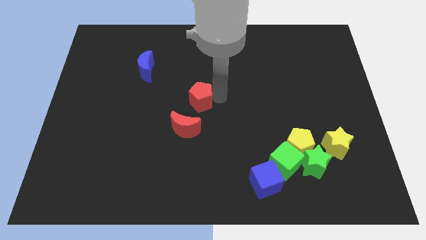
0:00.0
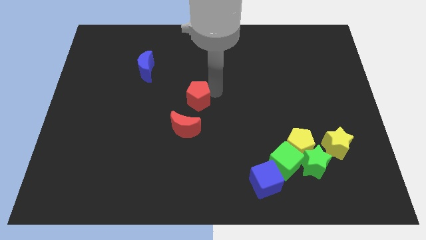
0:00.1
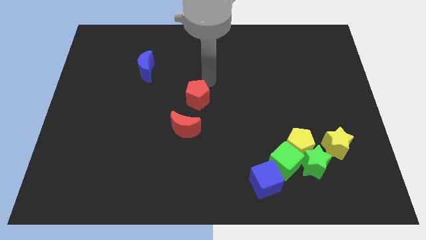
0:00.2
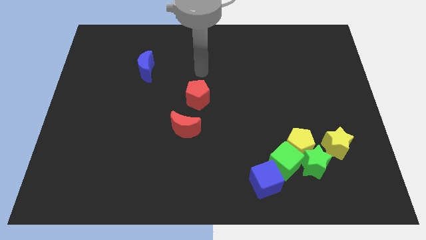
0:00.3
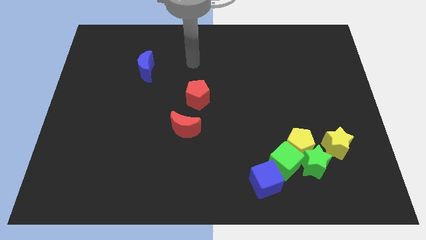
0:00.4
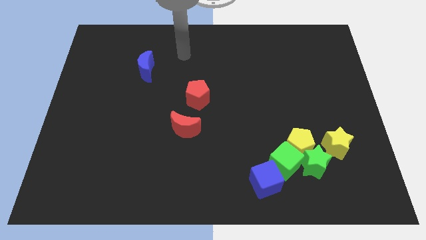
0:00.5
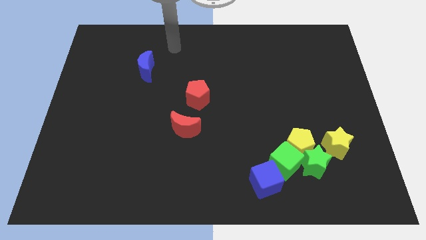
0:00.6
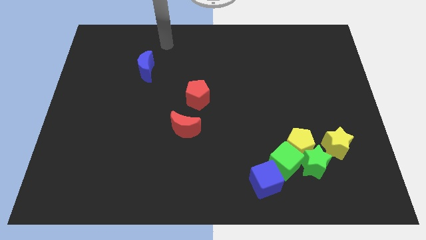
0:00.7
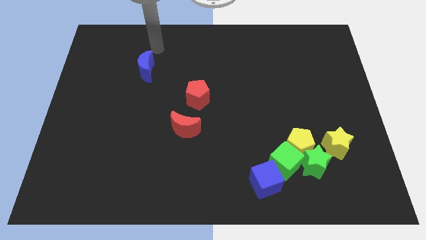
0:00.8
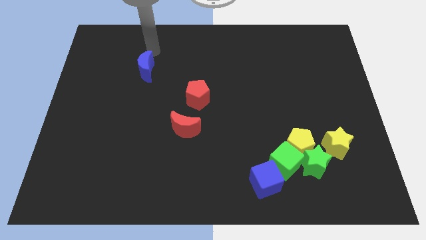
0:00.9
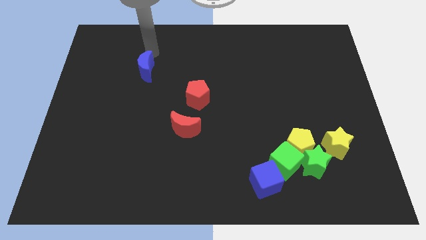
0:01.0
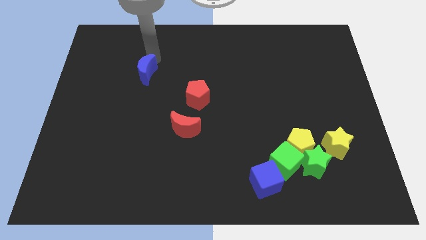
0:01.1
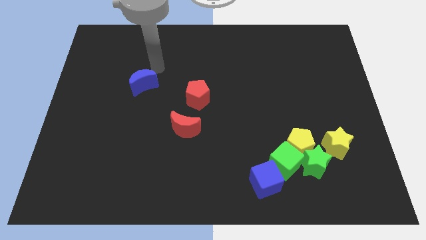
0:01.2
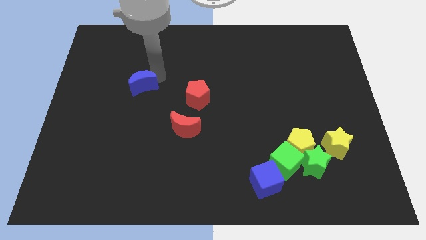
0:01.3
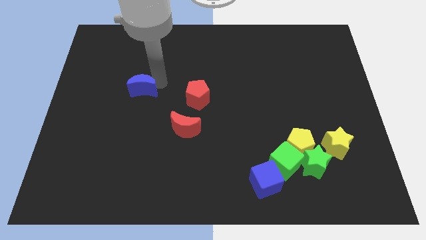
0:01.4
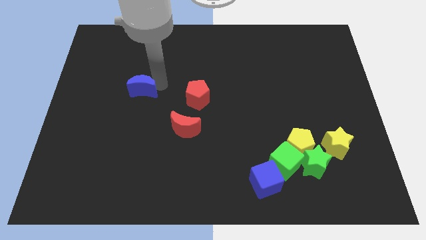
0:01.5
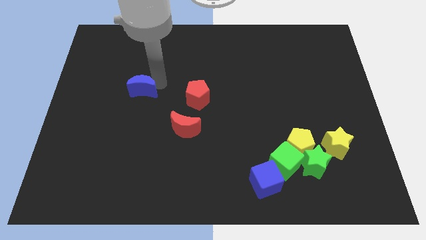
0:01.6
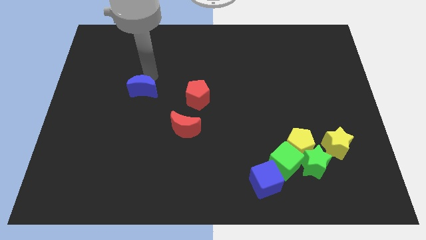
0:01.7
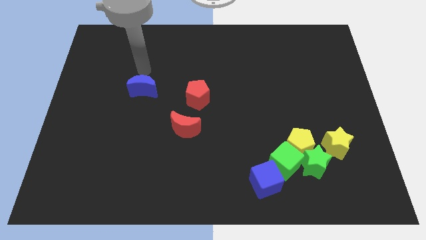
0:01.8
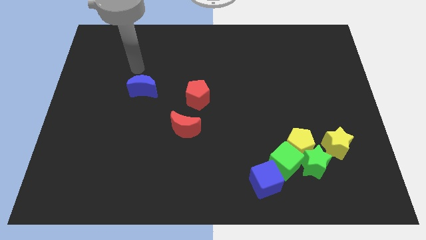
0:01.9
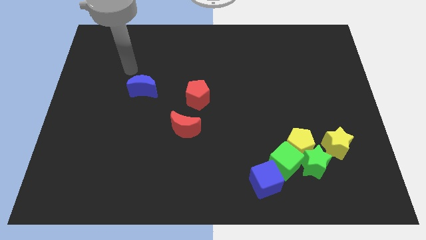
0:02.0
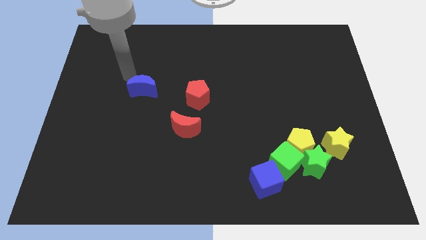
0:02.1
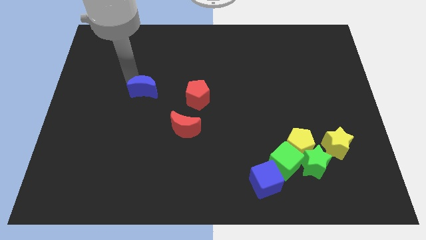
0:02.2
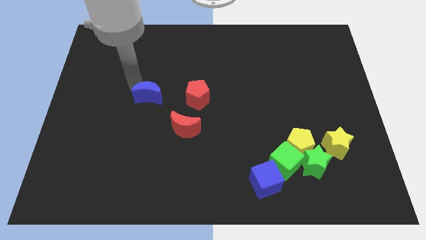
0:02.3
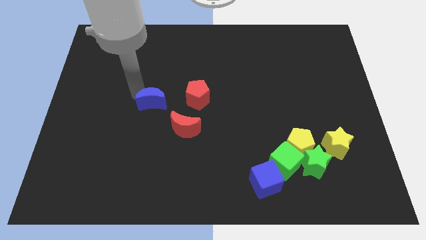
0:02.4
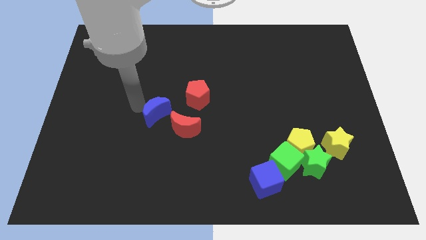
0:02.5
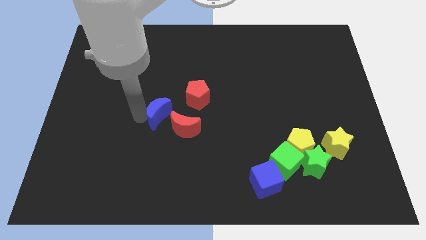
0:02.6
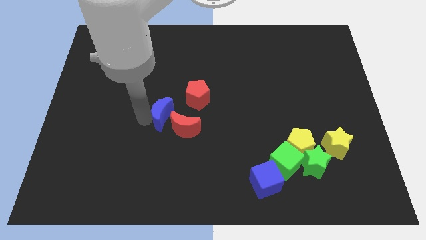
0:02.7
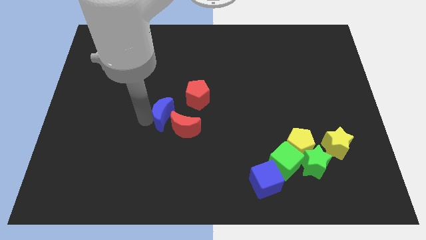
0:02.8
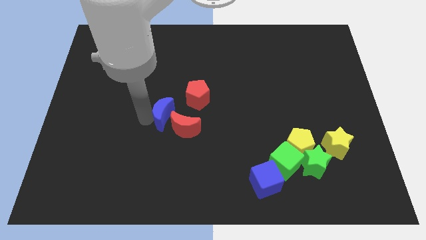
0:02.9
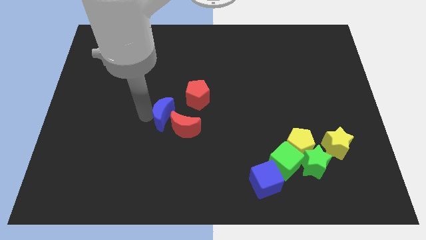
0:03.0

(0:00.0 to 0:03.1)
move blue moon close to the red moon

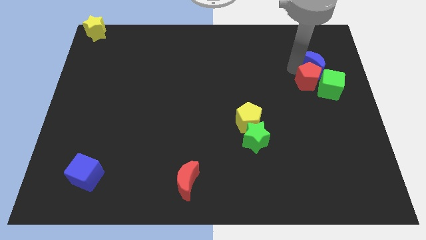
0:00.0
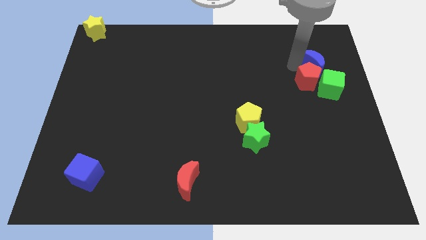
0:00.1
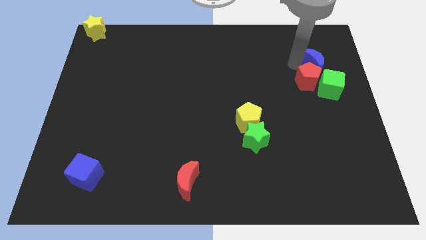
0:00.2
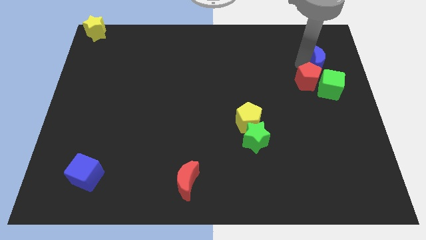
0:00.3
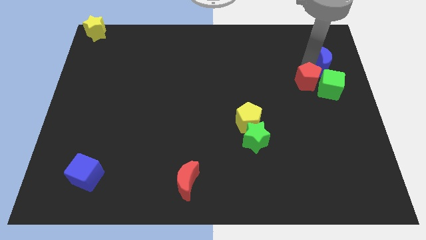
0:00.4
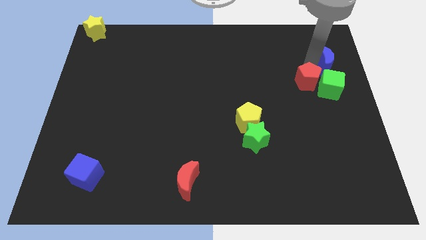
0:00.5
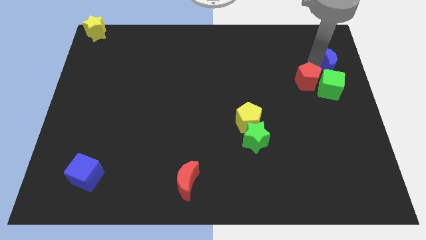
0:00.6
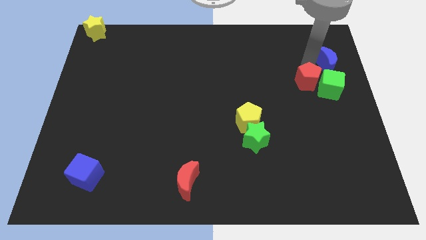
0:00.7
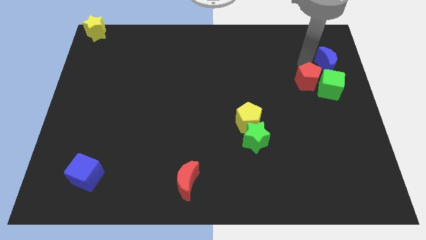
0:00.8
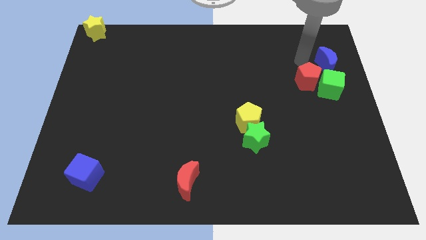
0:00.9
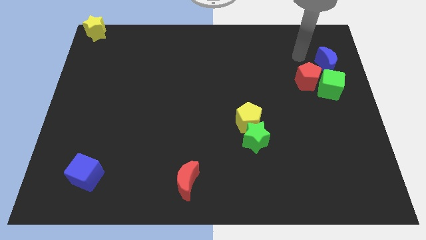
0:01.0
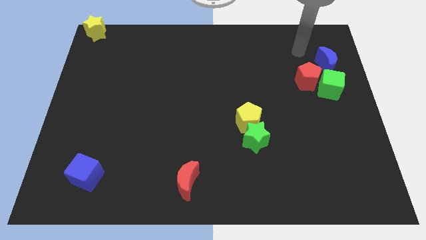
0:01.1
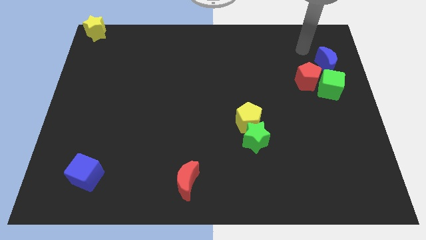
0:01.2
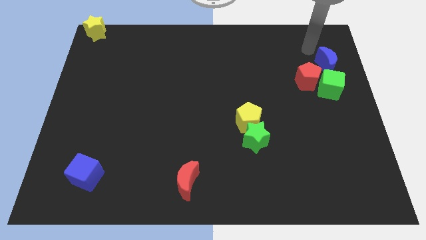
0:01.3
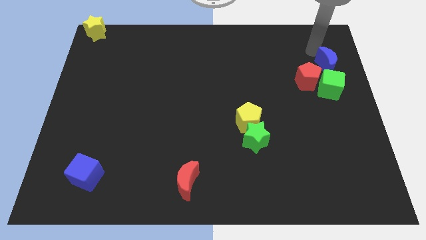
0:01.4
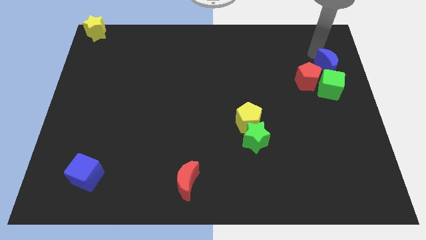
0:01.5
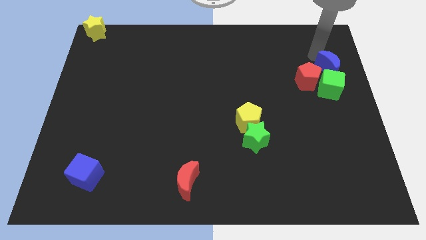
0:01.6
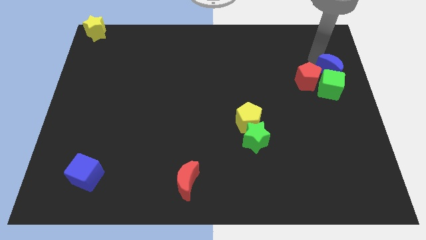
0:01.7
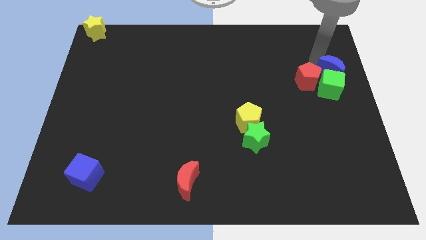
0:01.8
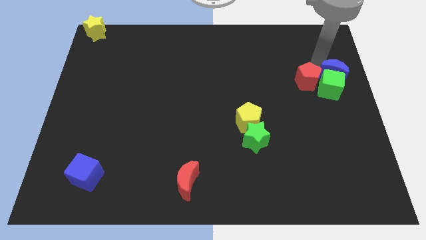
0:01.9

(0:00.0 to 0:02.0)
move the blue crescent above the green cube

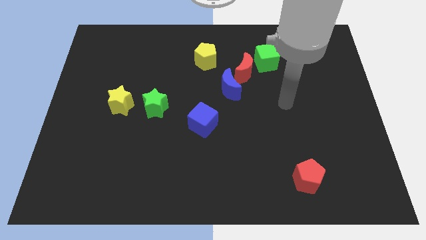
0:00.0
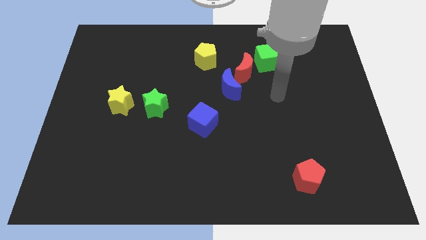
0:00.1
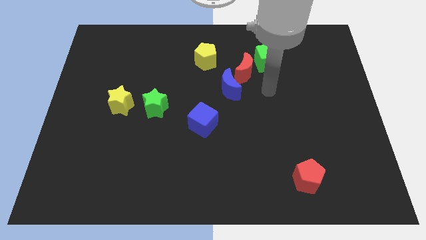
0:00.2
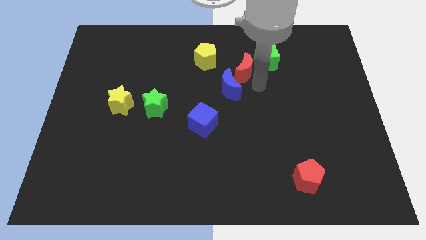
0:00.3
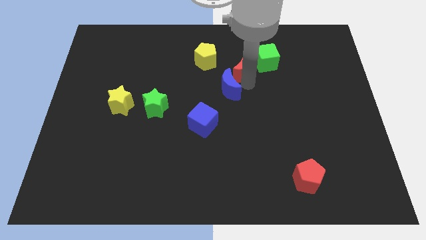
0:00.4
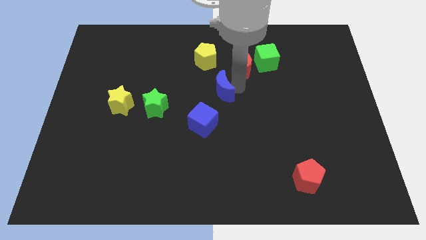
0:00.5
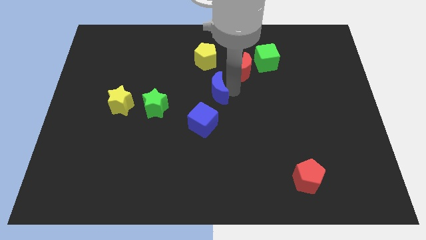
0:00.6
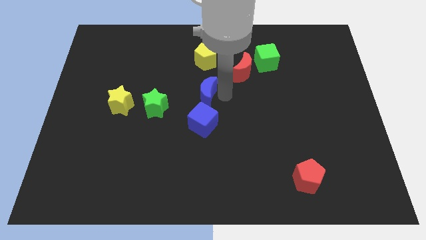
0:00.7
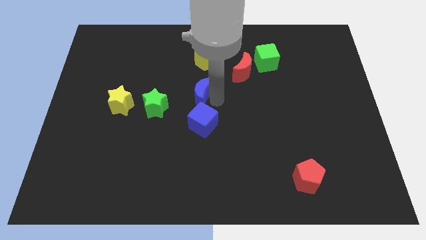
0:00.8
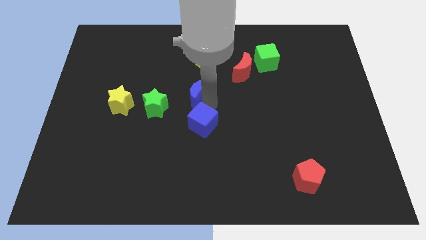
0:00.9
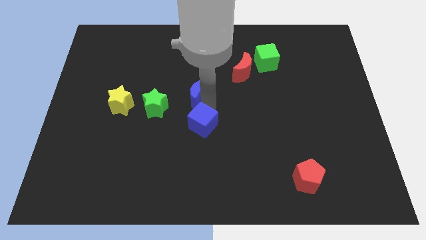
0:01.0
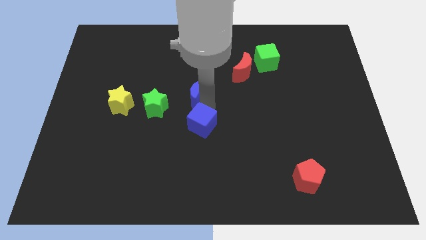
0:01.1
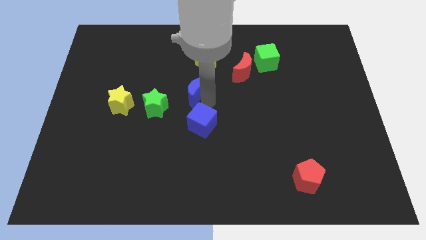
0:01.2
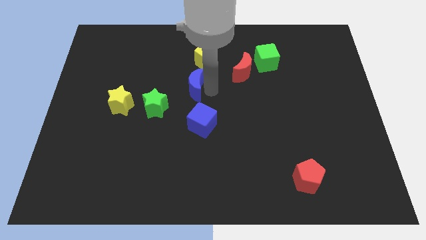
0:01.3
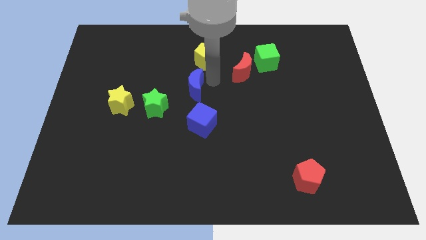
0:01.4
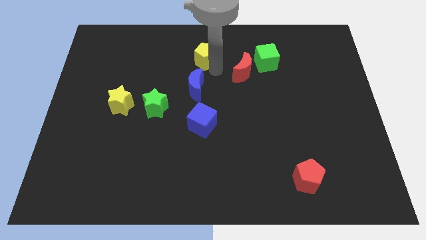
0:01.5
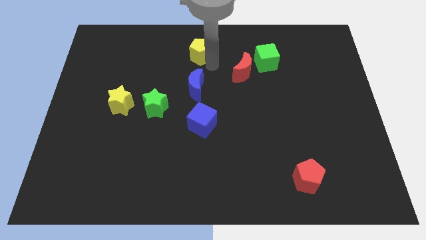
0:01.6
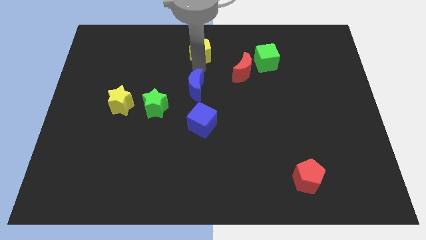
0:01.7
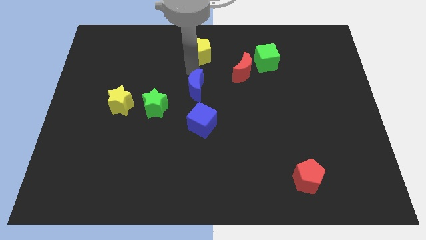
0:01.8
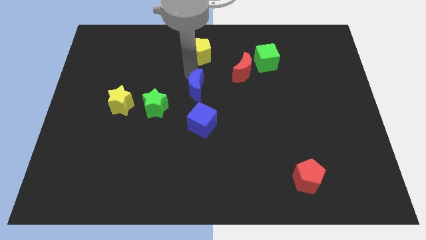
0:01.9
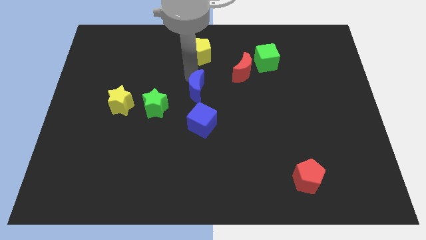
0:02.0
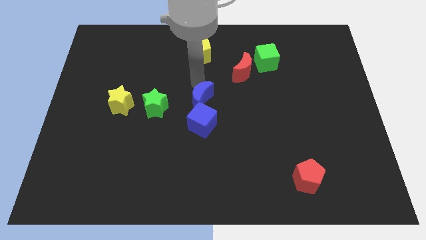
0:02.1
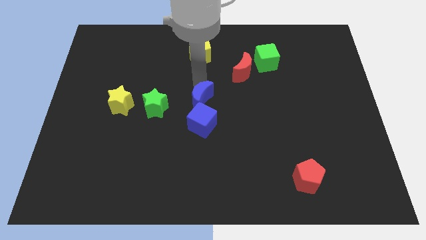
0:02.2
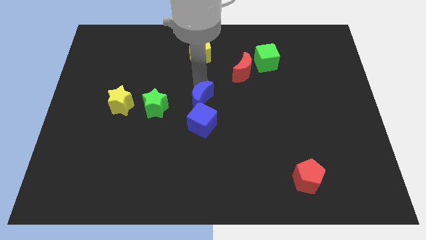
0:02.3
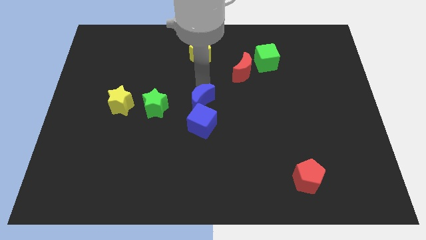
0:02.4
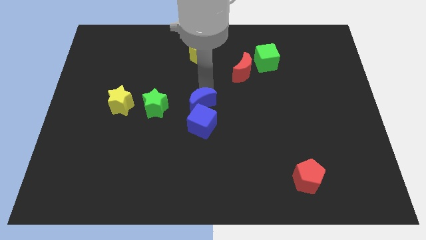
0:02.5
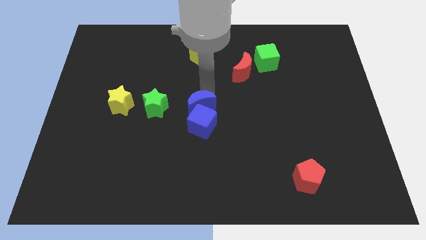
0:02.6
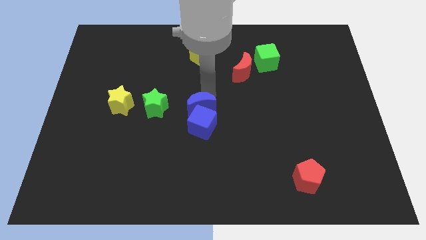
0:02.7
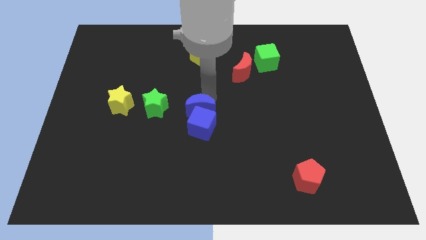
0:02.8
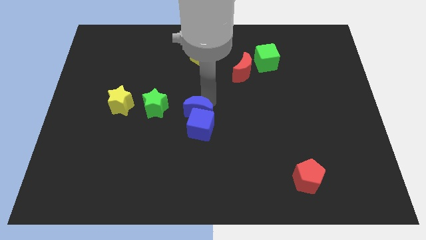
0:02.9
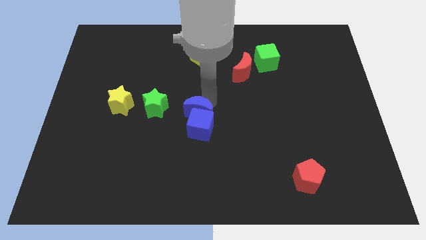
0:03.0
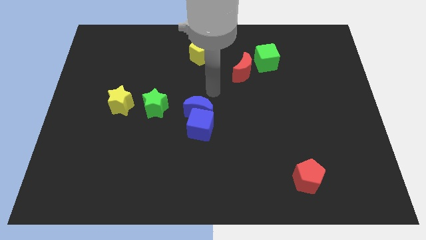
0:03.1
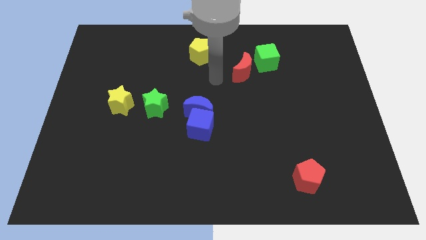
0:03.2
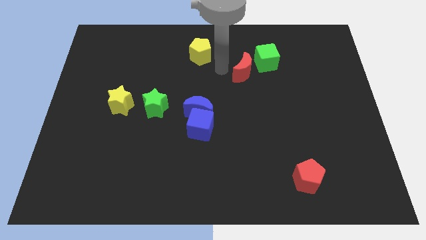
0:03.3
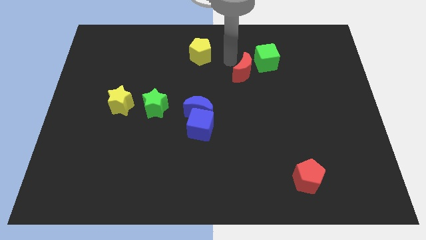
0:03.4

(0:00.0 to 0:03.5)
push the blue moon into the blue cube

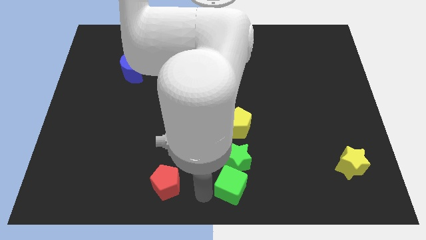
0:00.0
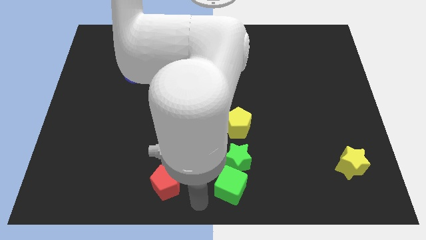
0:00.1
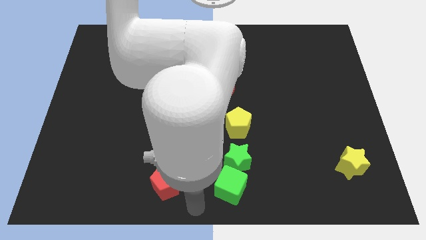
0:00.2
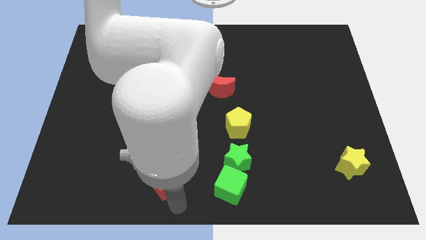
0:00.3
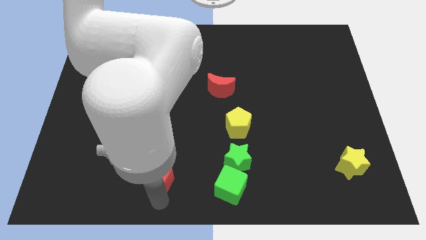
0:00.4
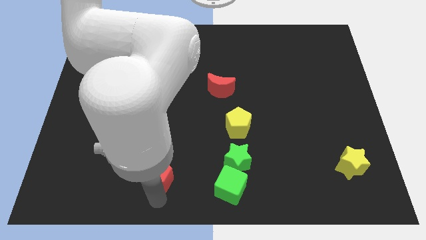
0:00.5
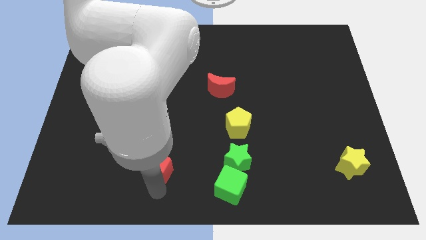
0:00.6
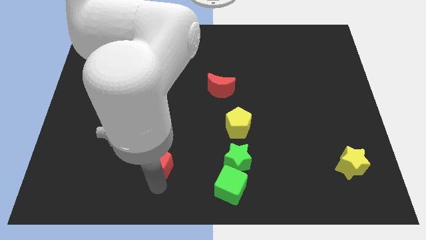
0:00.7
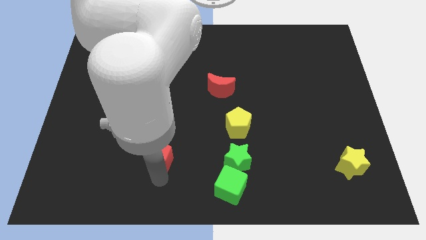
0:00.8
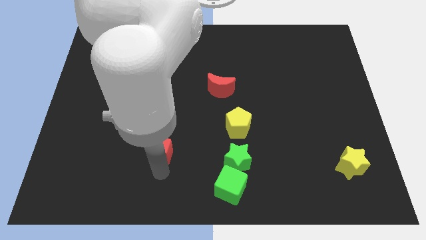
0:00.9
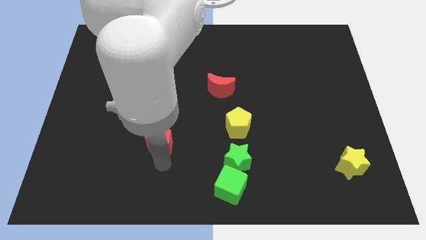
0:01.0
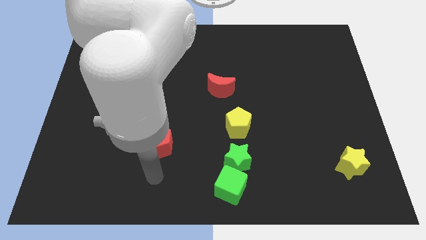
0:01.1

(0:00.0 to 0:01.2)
move the red pentagon towards the center of the board
